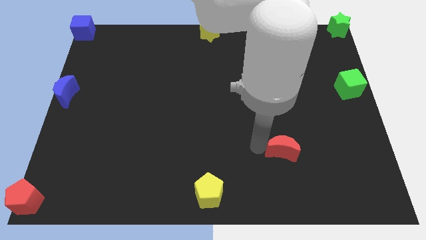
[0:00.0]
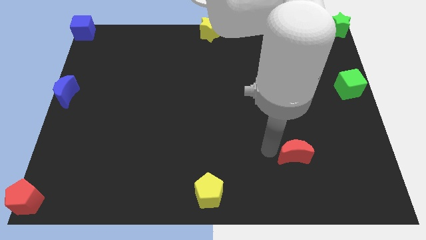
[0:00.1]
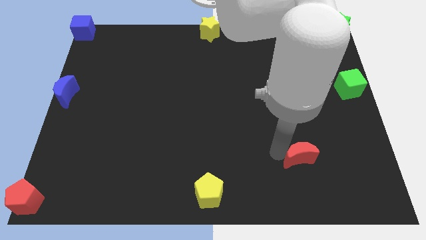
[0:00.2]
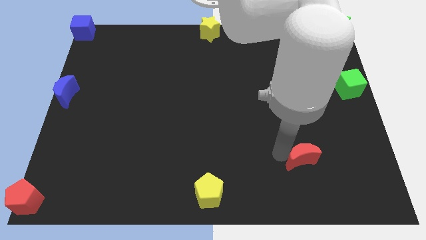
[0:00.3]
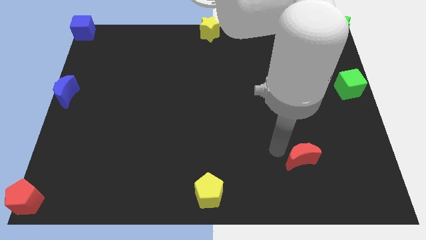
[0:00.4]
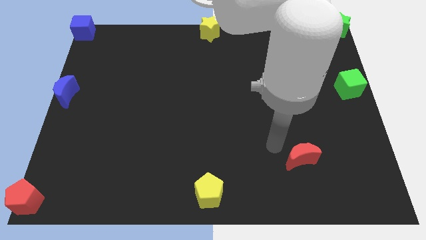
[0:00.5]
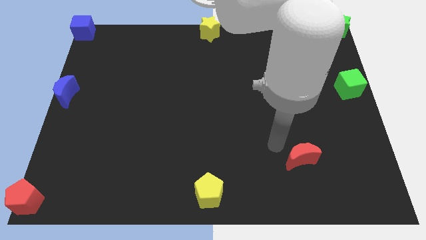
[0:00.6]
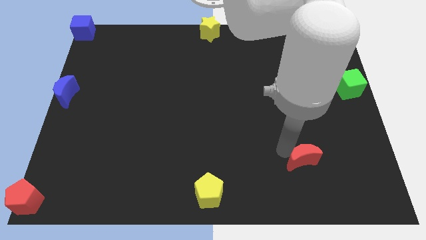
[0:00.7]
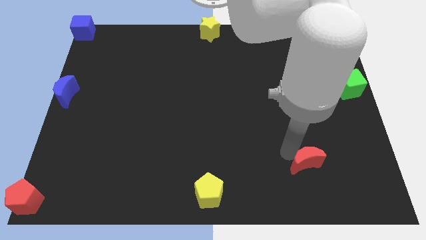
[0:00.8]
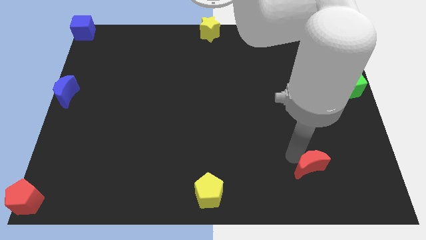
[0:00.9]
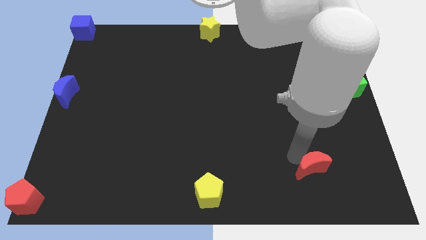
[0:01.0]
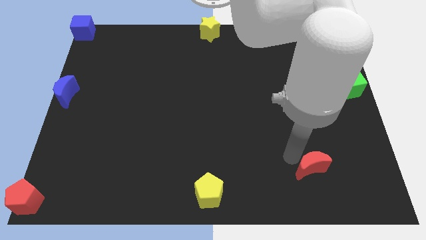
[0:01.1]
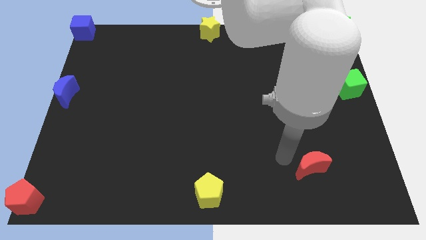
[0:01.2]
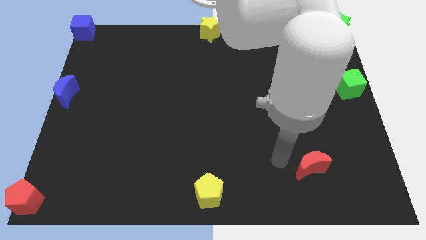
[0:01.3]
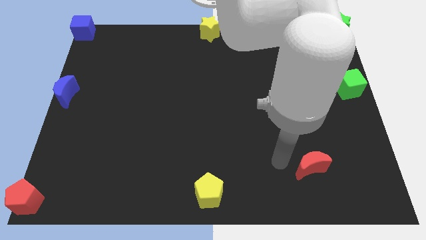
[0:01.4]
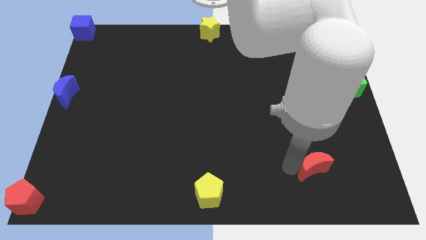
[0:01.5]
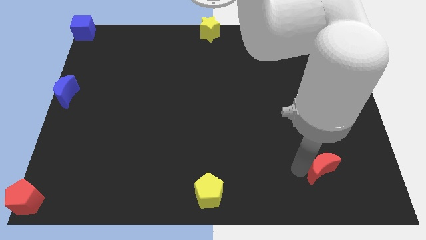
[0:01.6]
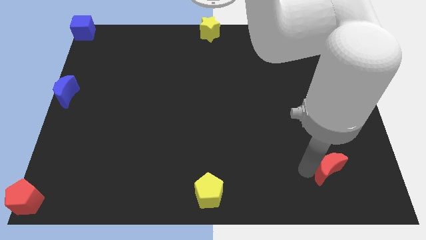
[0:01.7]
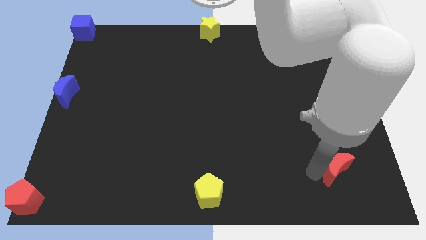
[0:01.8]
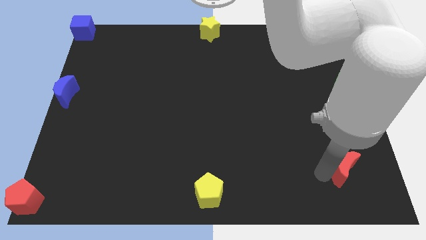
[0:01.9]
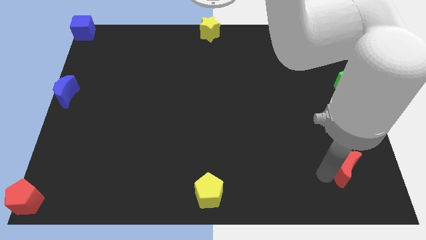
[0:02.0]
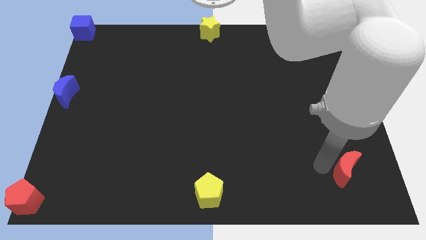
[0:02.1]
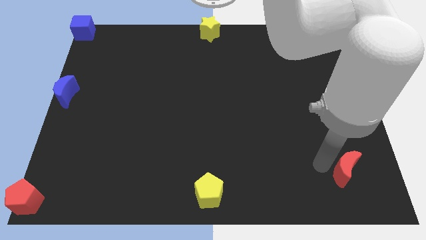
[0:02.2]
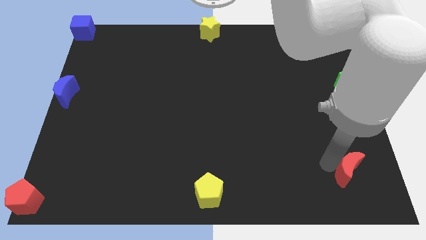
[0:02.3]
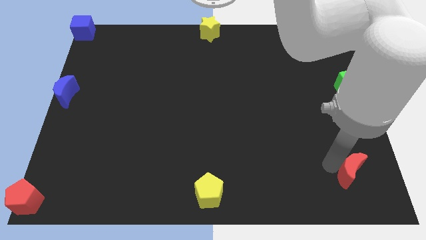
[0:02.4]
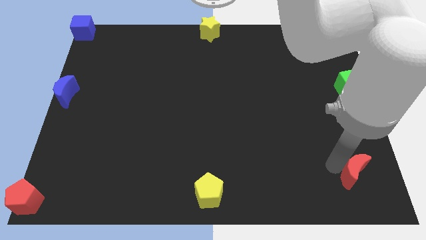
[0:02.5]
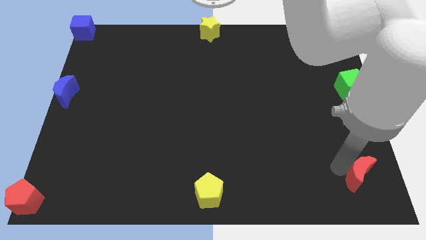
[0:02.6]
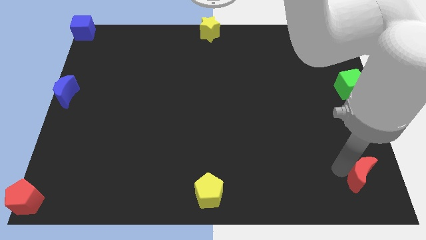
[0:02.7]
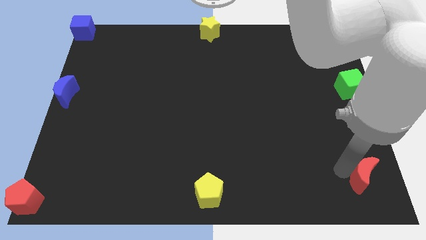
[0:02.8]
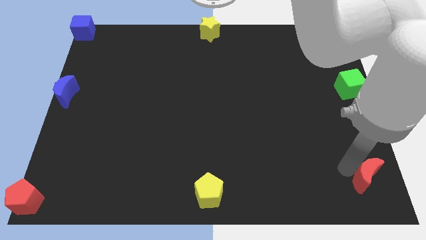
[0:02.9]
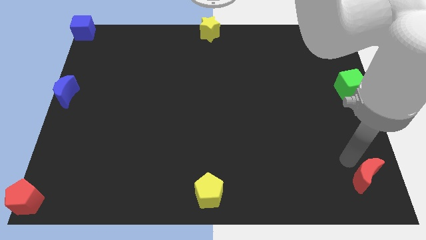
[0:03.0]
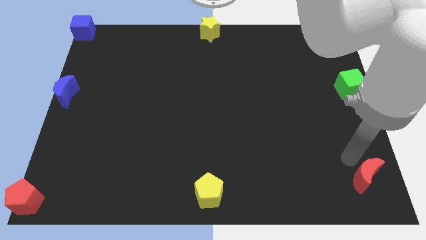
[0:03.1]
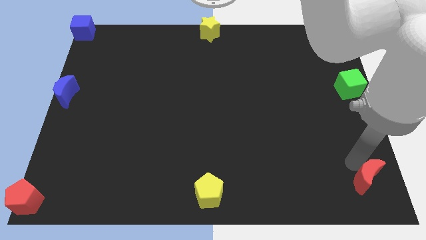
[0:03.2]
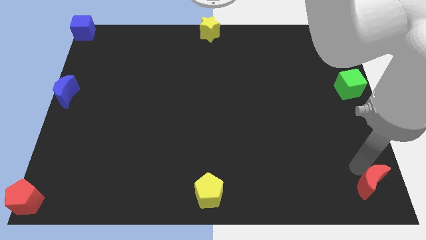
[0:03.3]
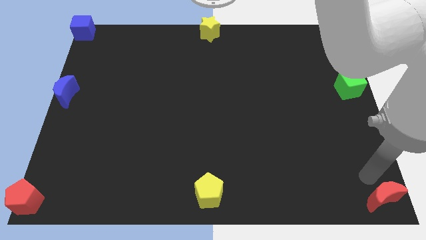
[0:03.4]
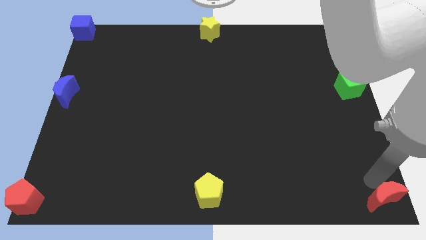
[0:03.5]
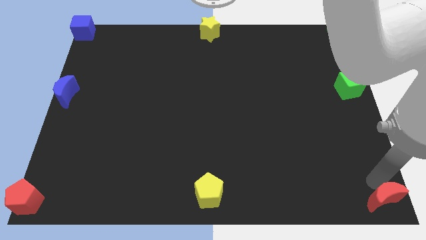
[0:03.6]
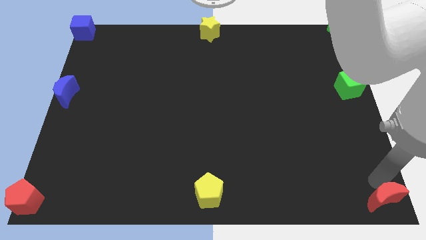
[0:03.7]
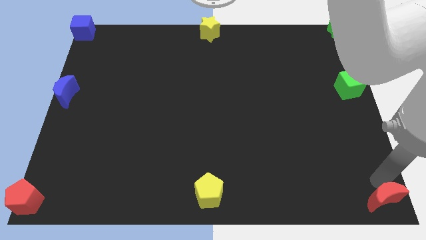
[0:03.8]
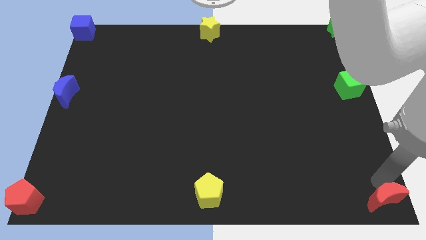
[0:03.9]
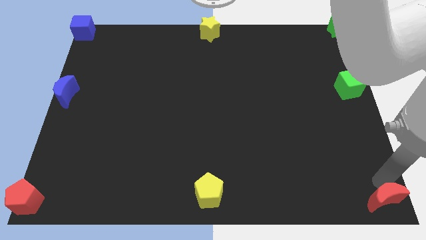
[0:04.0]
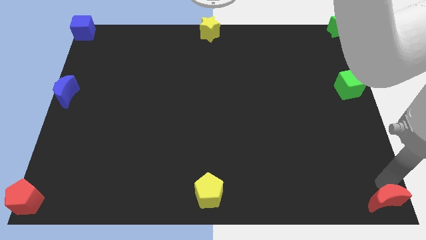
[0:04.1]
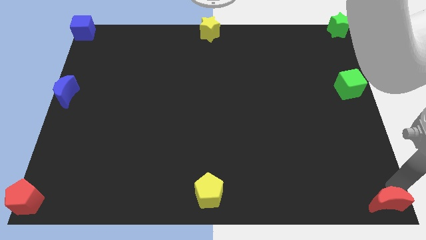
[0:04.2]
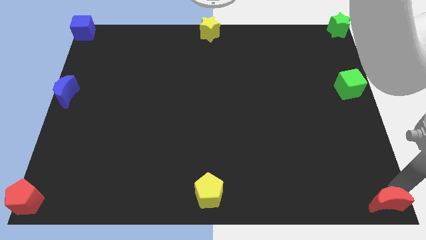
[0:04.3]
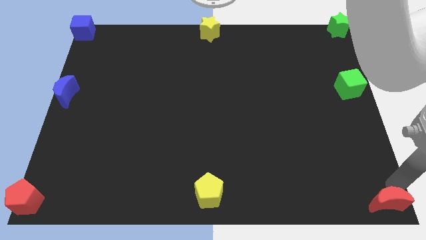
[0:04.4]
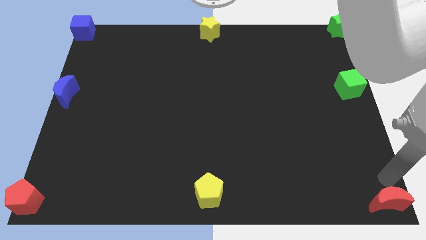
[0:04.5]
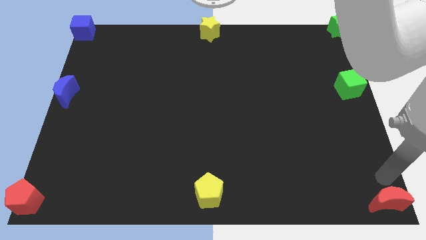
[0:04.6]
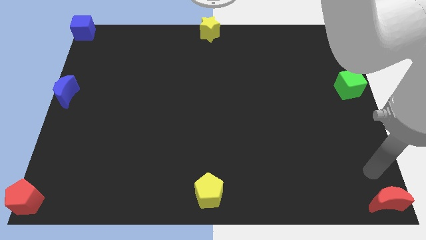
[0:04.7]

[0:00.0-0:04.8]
move red moon to the right bottom corner of the board

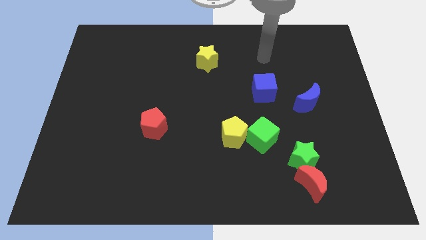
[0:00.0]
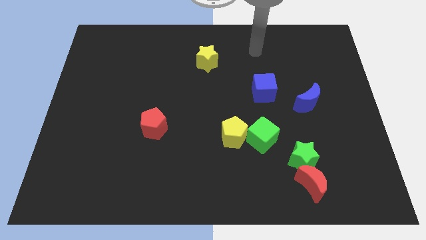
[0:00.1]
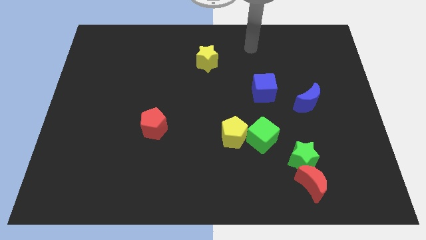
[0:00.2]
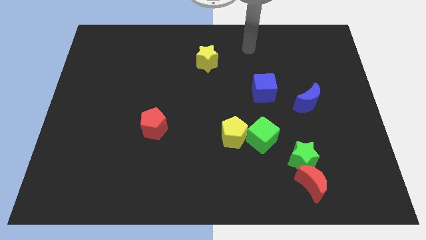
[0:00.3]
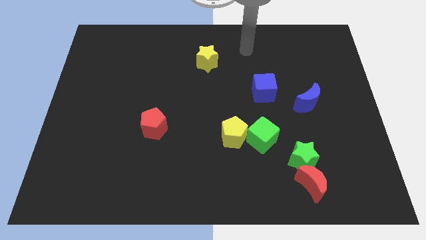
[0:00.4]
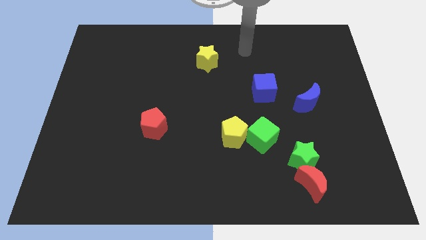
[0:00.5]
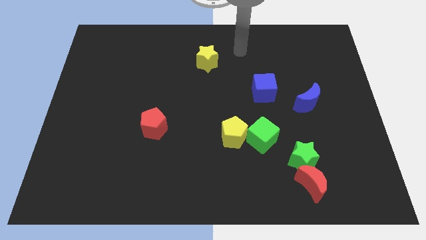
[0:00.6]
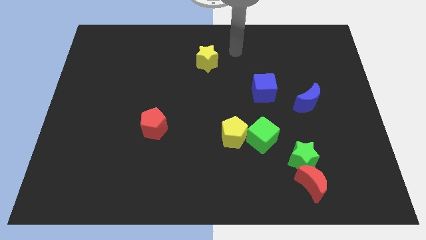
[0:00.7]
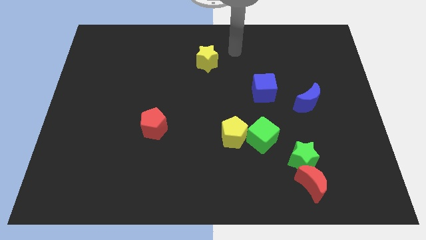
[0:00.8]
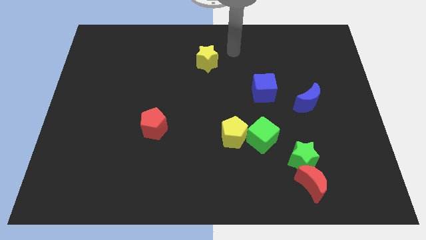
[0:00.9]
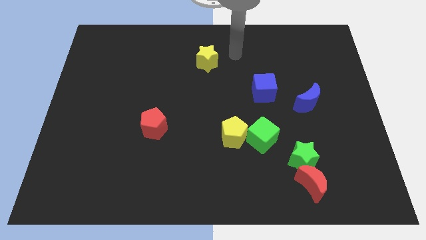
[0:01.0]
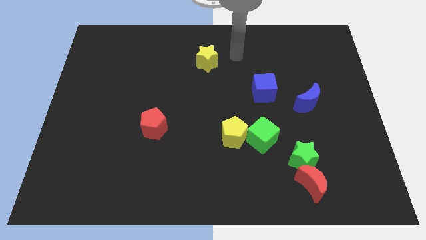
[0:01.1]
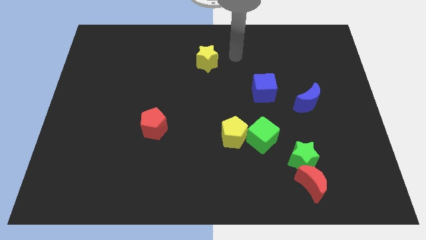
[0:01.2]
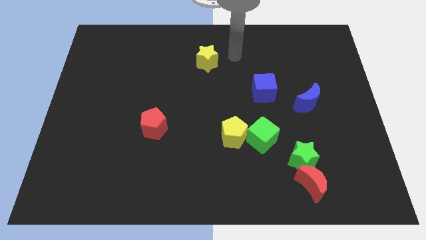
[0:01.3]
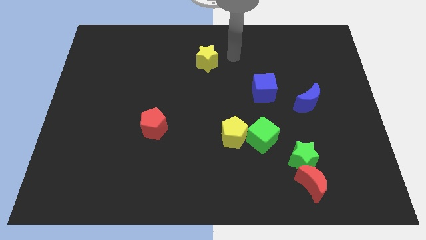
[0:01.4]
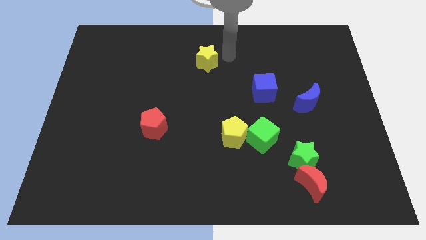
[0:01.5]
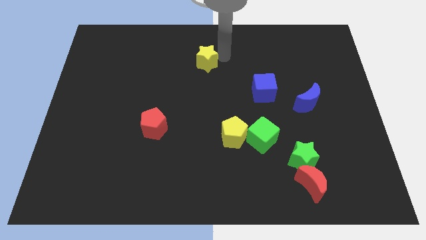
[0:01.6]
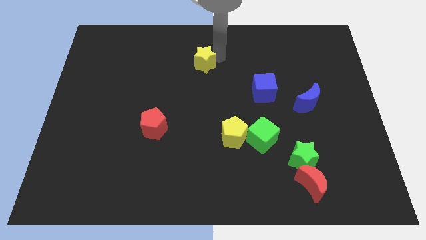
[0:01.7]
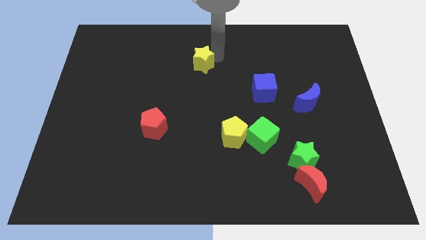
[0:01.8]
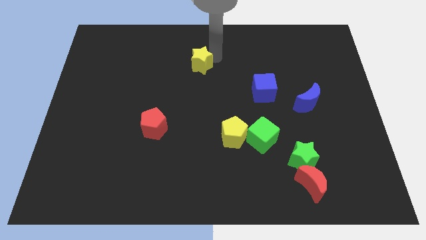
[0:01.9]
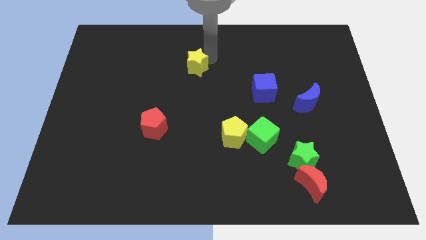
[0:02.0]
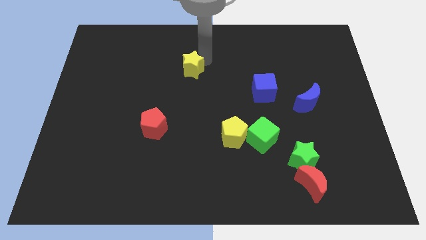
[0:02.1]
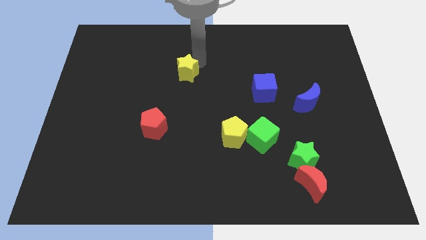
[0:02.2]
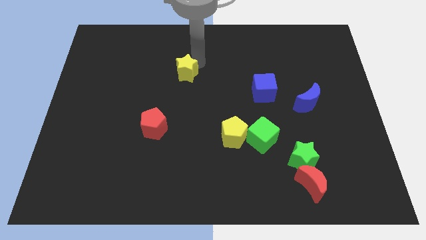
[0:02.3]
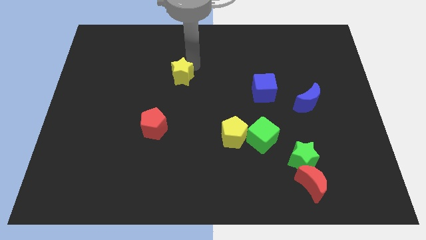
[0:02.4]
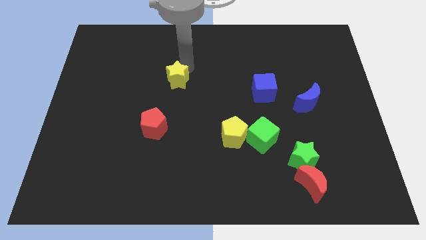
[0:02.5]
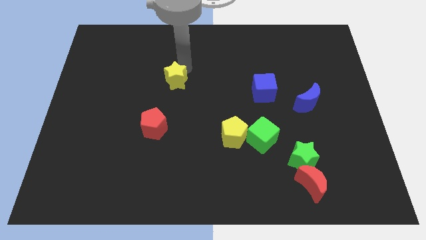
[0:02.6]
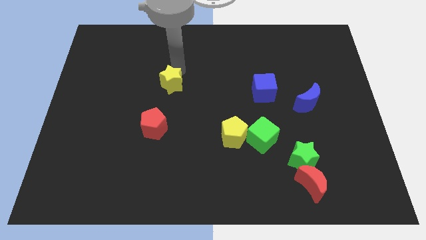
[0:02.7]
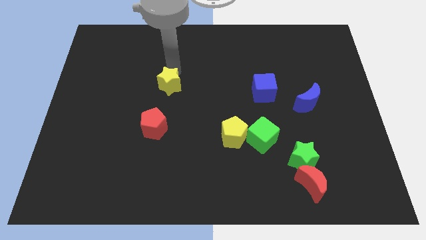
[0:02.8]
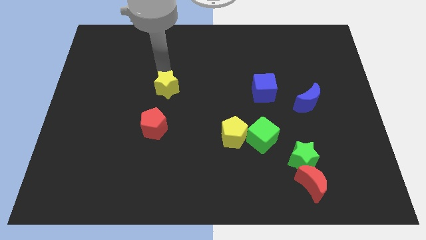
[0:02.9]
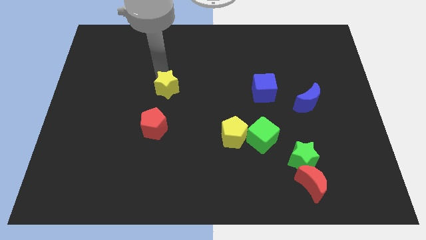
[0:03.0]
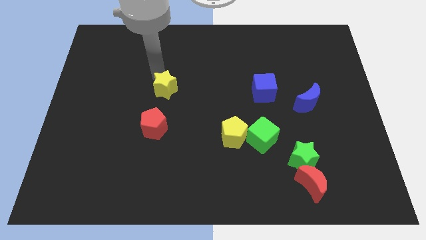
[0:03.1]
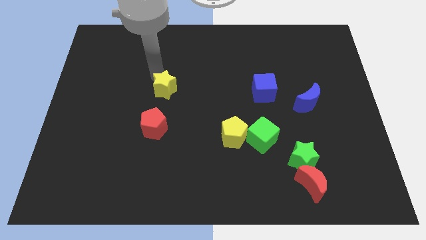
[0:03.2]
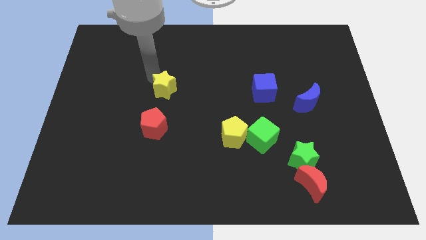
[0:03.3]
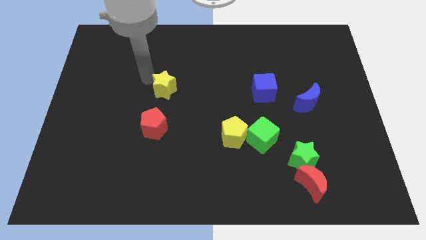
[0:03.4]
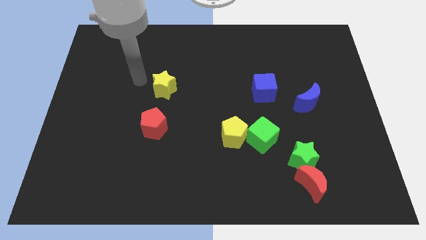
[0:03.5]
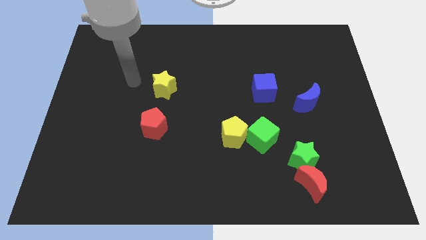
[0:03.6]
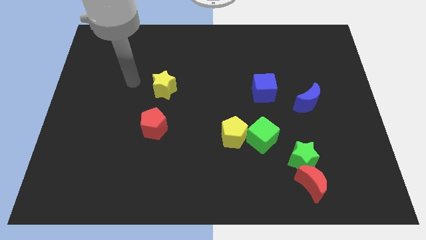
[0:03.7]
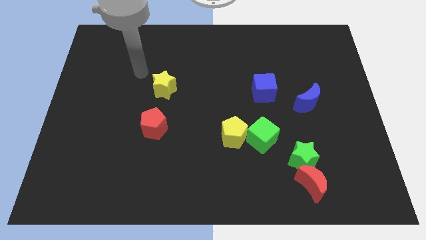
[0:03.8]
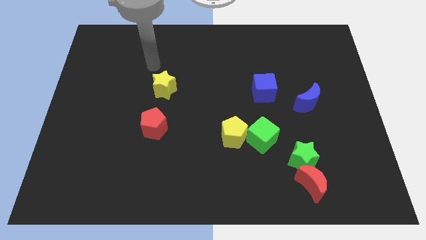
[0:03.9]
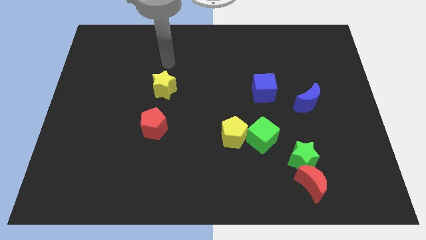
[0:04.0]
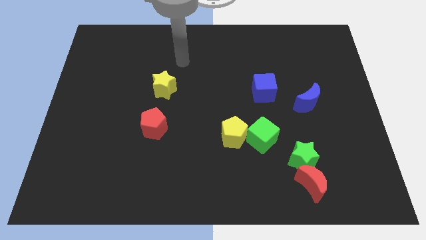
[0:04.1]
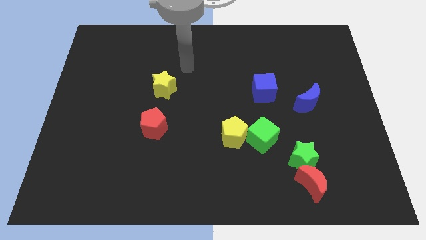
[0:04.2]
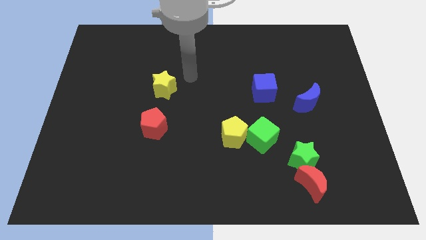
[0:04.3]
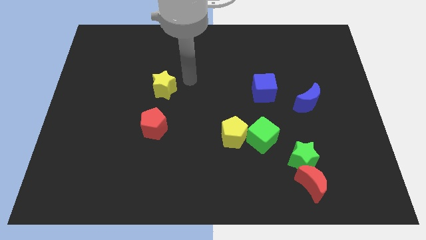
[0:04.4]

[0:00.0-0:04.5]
push the yellow star towards the red pentagon
